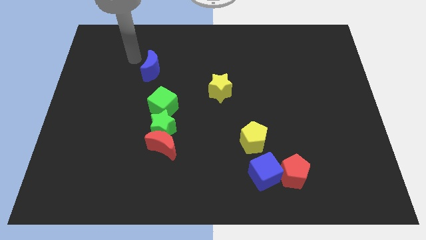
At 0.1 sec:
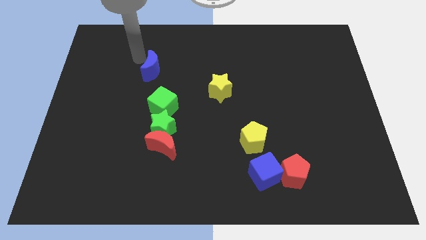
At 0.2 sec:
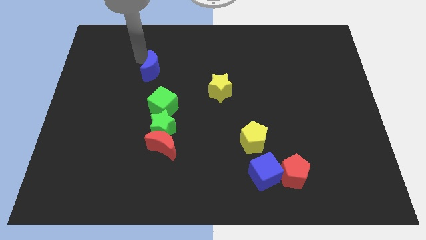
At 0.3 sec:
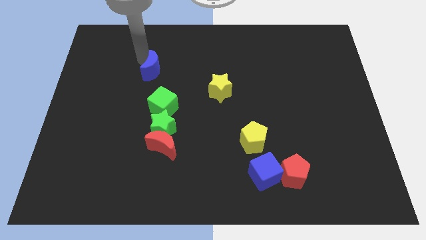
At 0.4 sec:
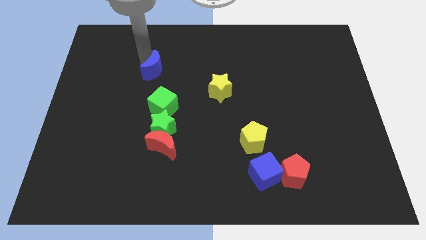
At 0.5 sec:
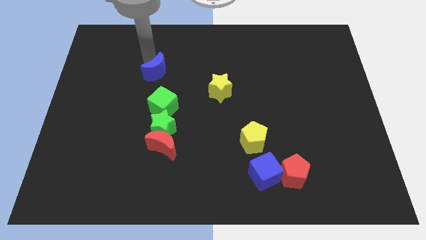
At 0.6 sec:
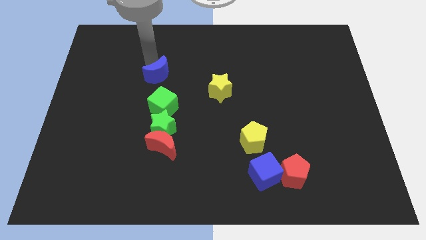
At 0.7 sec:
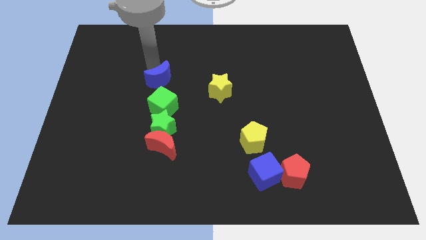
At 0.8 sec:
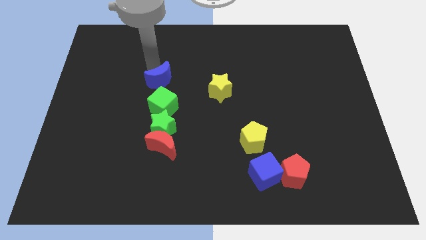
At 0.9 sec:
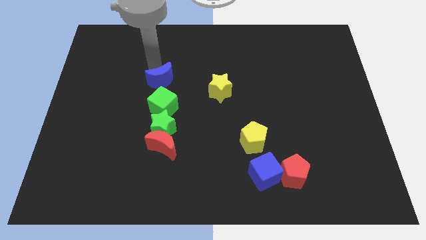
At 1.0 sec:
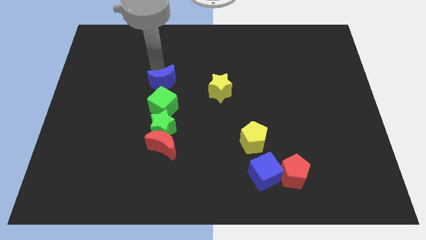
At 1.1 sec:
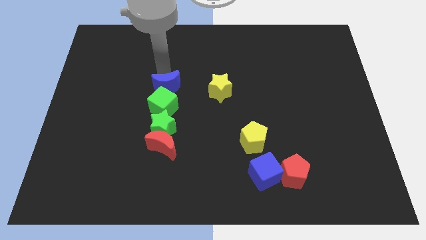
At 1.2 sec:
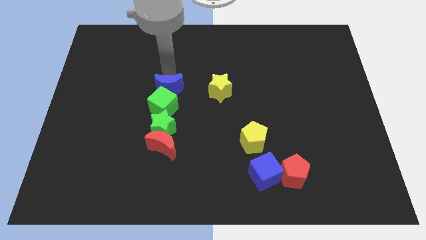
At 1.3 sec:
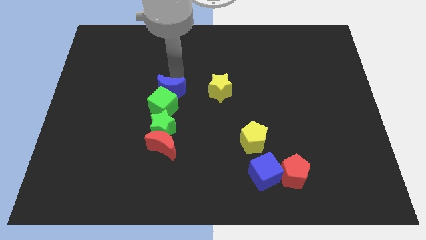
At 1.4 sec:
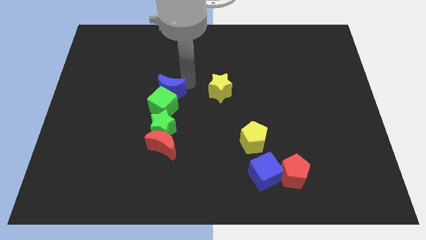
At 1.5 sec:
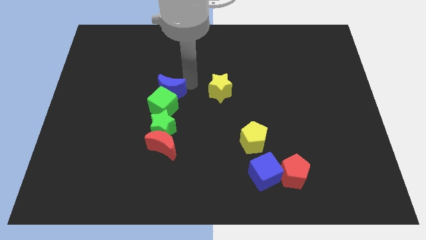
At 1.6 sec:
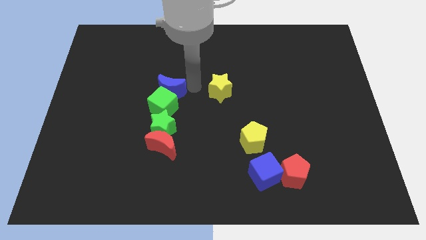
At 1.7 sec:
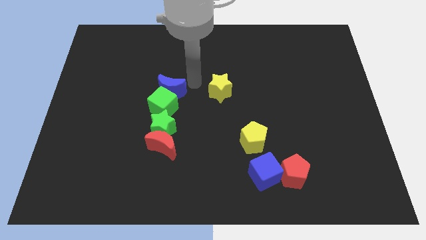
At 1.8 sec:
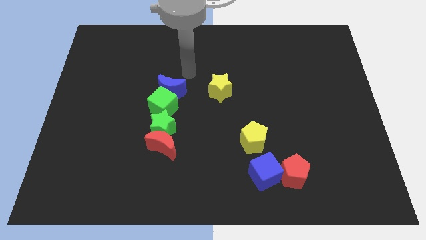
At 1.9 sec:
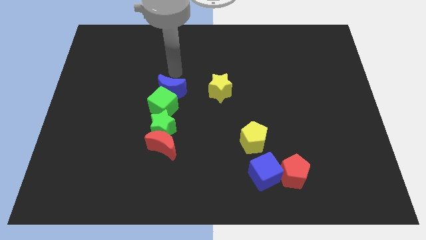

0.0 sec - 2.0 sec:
place the blue moon above the green cube

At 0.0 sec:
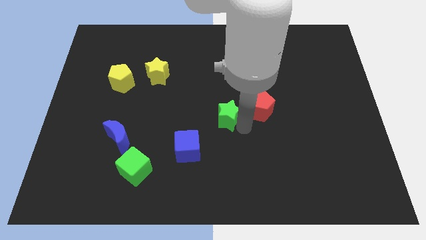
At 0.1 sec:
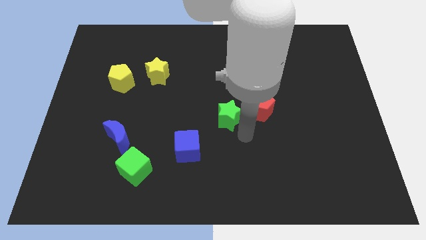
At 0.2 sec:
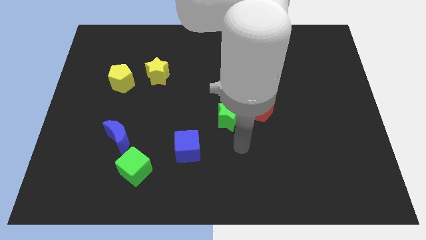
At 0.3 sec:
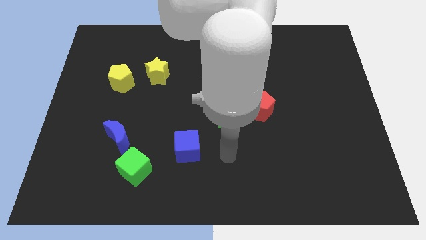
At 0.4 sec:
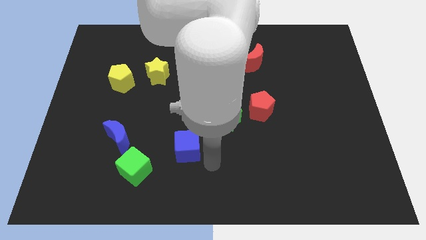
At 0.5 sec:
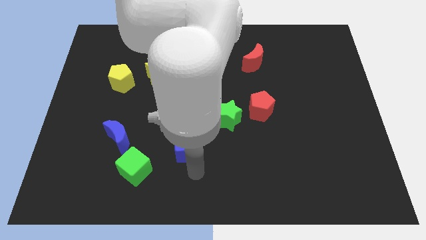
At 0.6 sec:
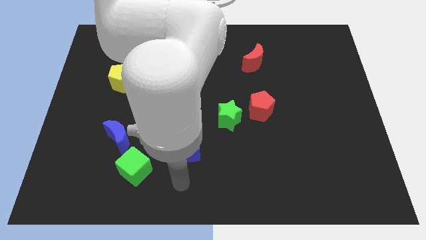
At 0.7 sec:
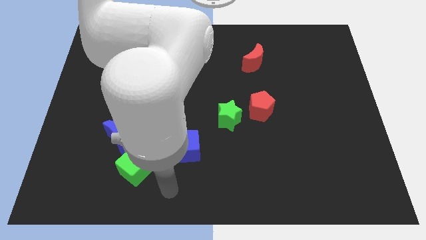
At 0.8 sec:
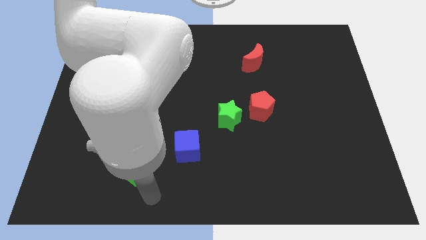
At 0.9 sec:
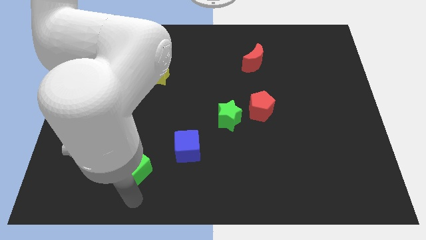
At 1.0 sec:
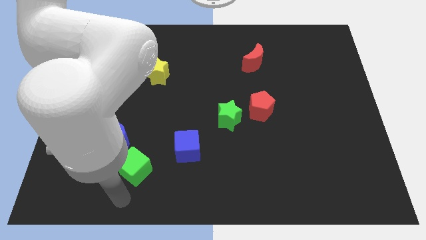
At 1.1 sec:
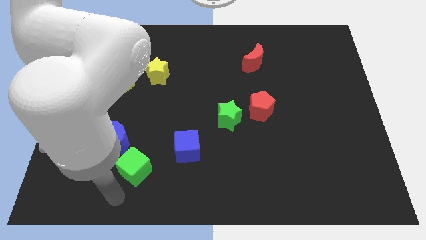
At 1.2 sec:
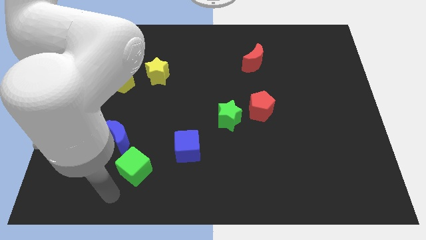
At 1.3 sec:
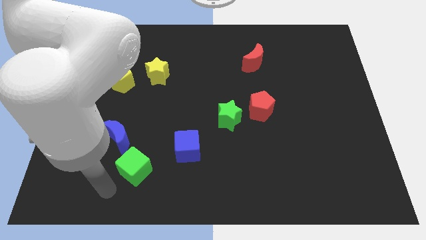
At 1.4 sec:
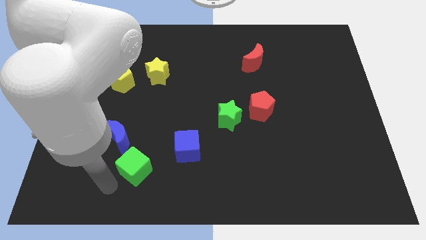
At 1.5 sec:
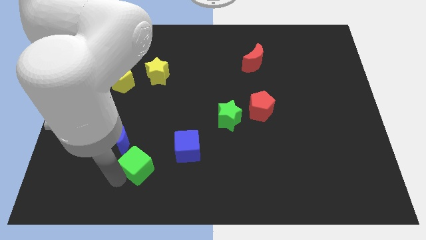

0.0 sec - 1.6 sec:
move your arm towards the green cube

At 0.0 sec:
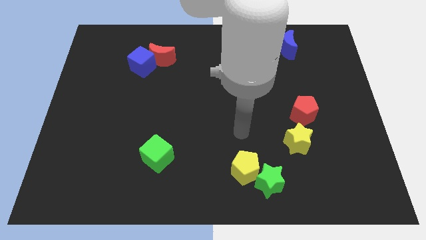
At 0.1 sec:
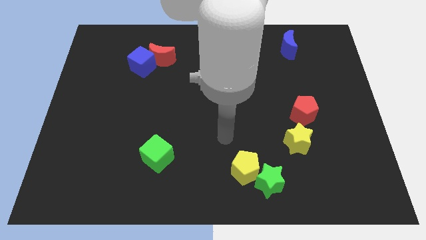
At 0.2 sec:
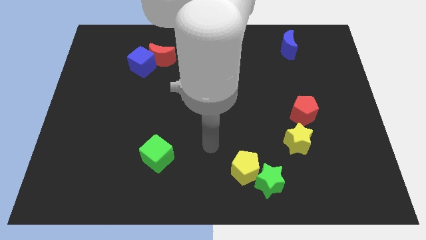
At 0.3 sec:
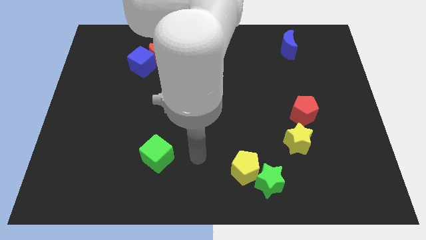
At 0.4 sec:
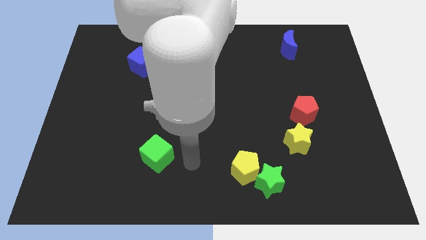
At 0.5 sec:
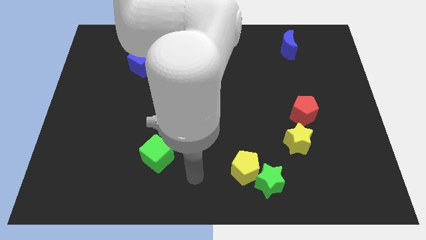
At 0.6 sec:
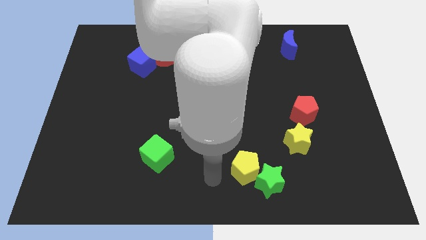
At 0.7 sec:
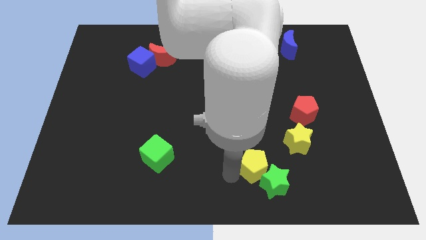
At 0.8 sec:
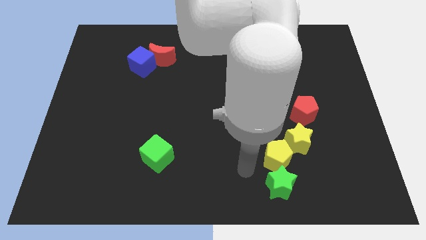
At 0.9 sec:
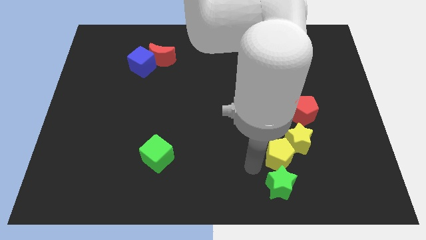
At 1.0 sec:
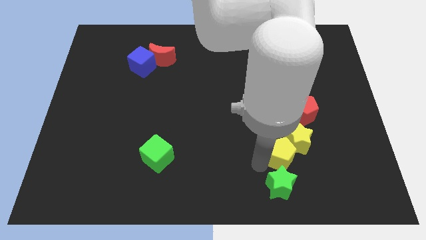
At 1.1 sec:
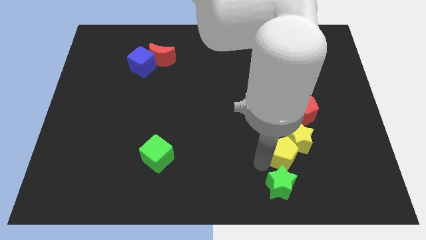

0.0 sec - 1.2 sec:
push the yellow pentagon into the yellow star

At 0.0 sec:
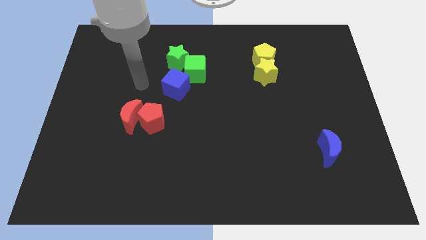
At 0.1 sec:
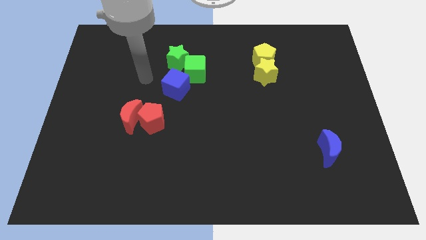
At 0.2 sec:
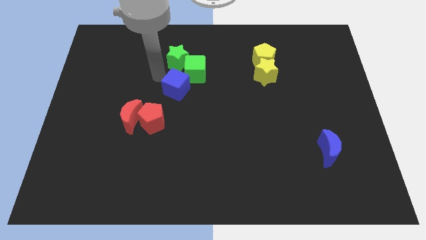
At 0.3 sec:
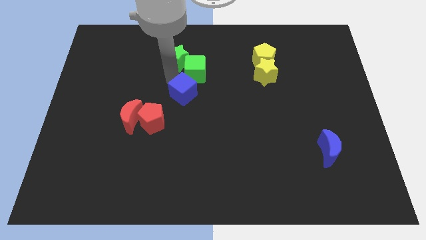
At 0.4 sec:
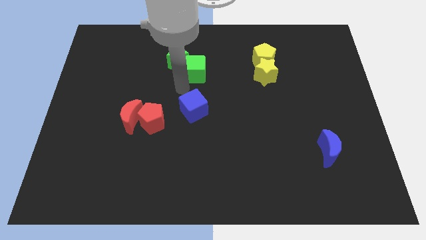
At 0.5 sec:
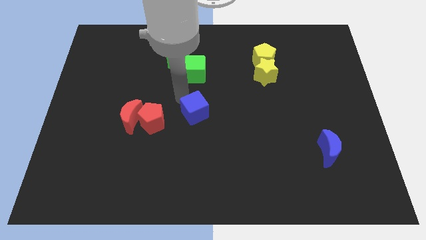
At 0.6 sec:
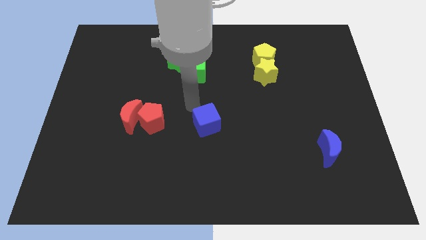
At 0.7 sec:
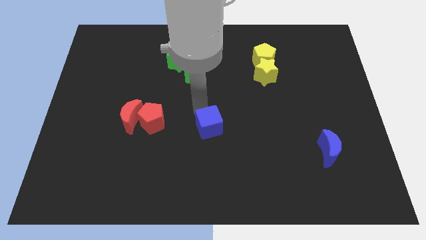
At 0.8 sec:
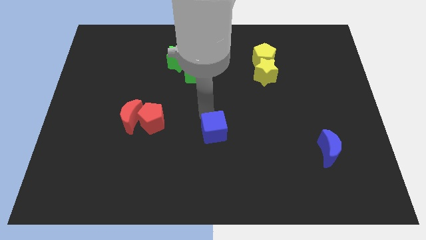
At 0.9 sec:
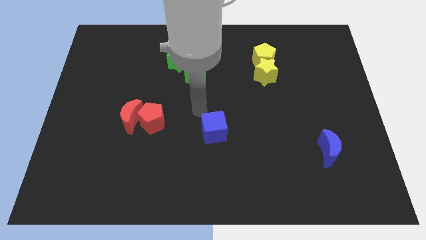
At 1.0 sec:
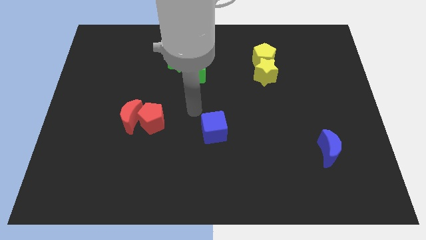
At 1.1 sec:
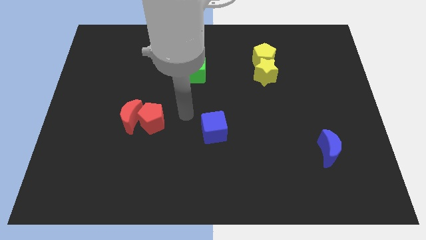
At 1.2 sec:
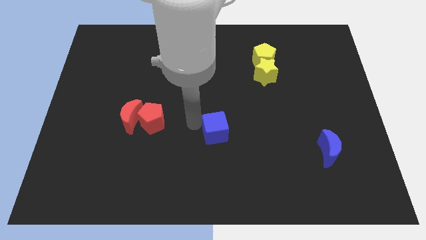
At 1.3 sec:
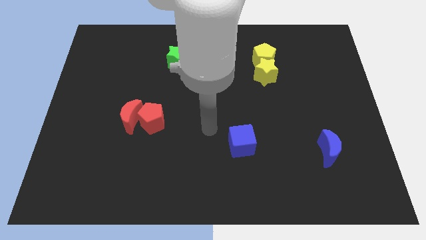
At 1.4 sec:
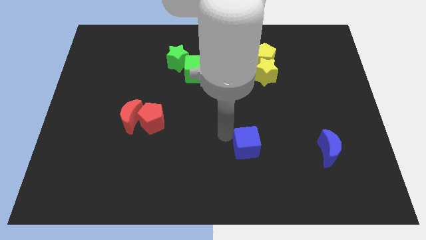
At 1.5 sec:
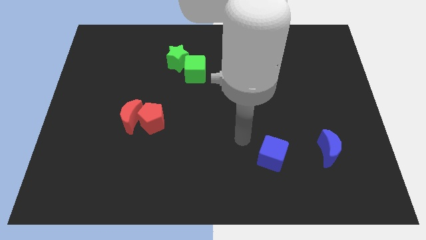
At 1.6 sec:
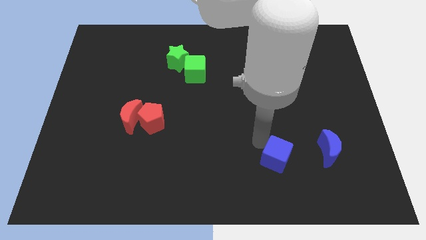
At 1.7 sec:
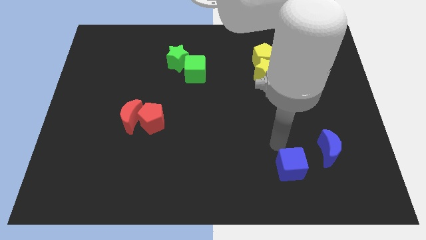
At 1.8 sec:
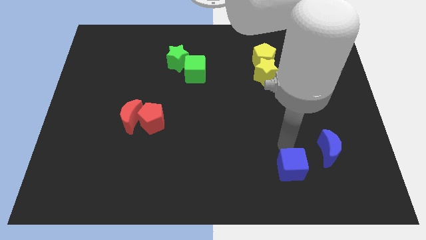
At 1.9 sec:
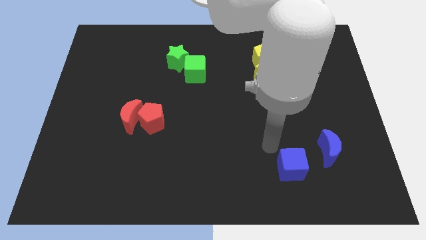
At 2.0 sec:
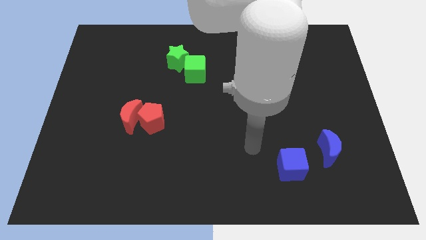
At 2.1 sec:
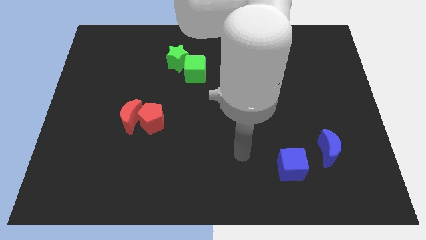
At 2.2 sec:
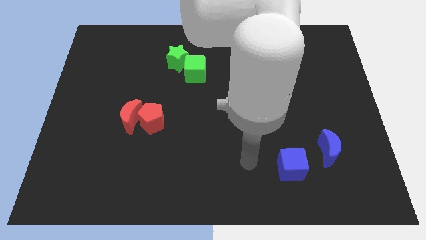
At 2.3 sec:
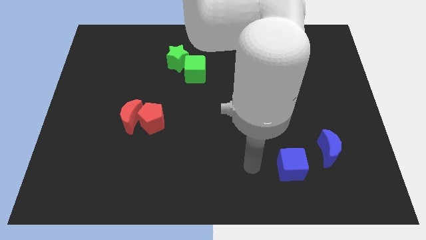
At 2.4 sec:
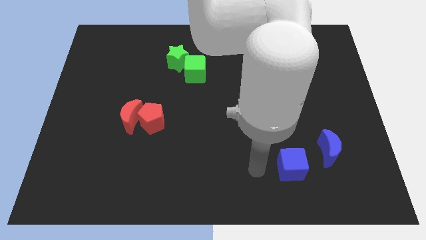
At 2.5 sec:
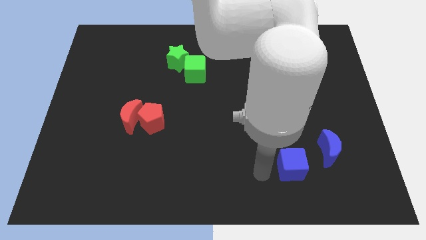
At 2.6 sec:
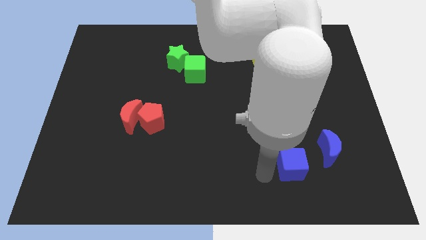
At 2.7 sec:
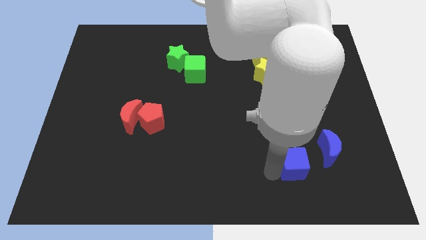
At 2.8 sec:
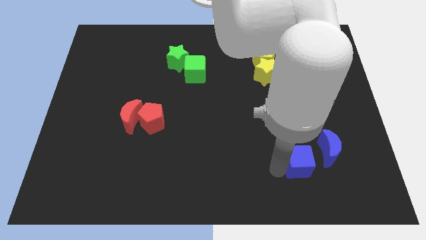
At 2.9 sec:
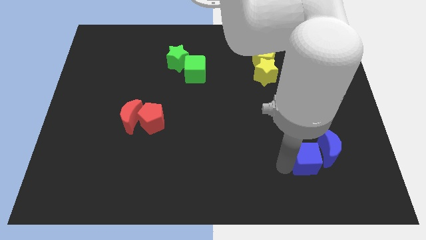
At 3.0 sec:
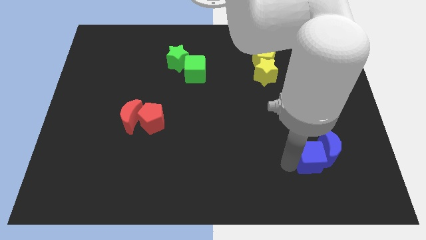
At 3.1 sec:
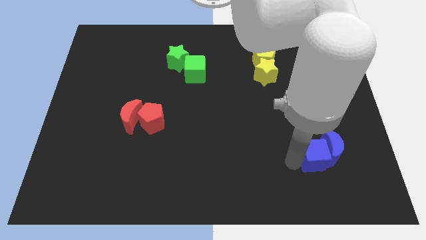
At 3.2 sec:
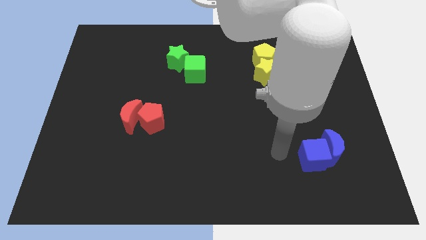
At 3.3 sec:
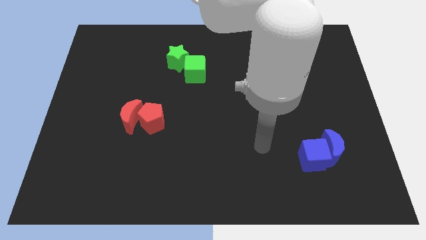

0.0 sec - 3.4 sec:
push blue cube into blue moon

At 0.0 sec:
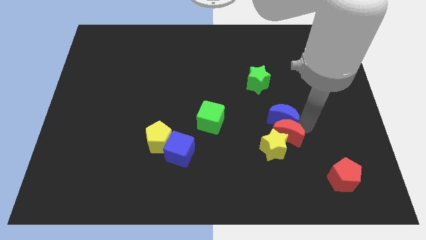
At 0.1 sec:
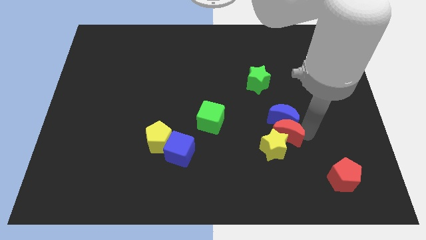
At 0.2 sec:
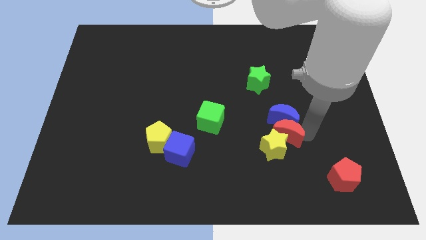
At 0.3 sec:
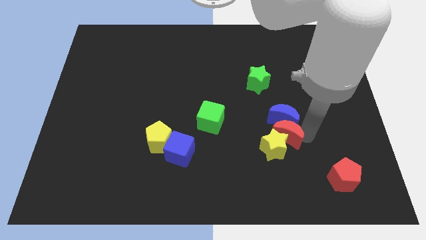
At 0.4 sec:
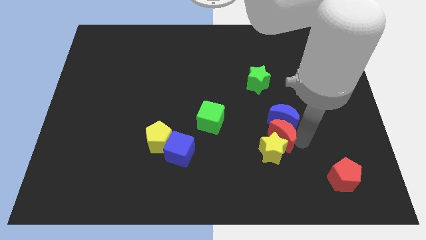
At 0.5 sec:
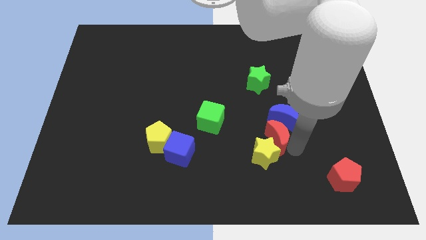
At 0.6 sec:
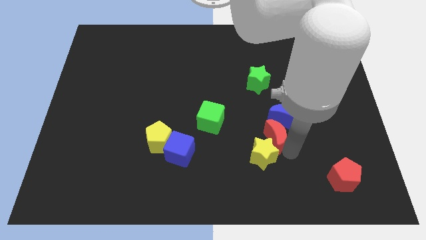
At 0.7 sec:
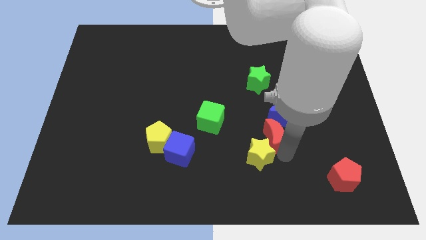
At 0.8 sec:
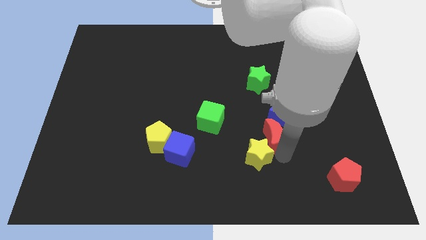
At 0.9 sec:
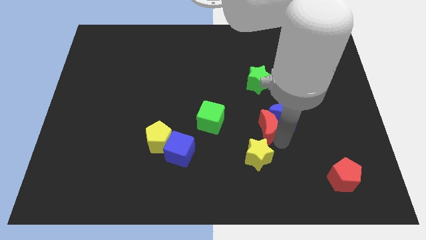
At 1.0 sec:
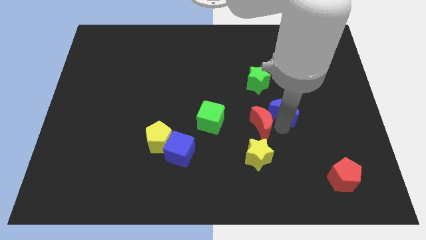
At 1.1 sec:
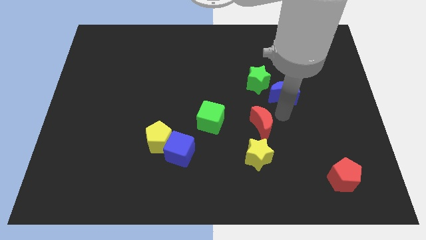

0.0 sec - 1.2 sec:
separate blue moon from red moon
